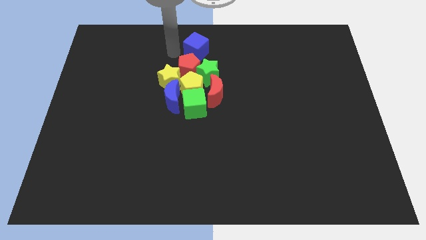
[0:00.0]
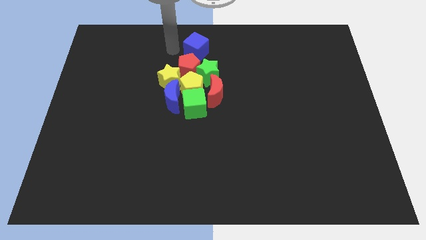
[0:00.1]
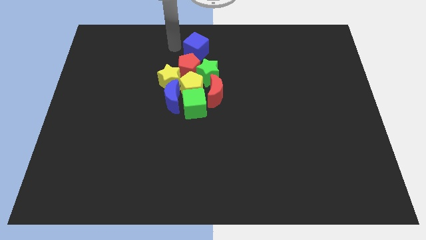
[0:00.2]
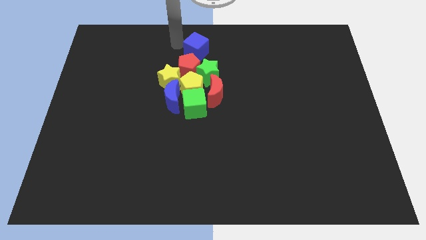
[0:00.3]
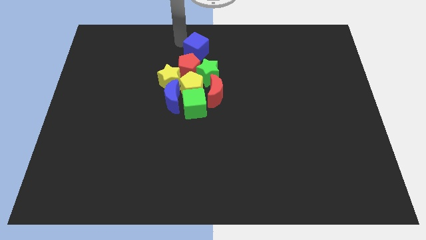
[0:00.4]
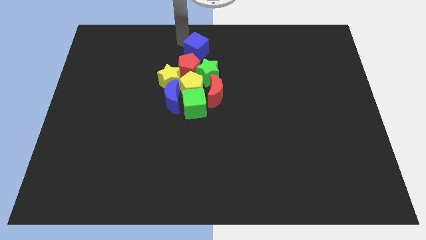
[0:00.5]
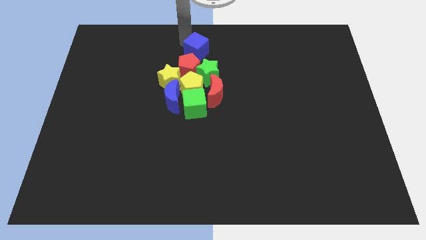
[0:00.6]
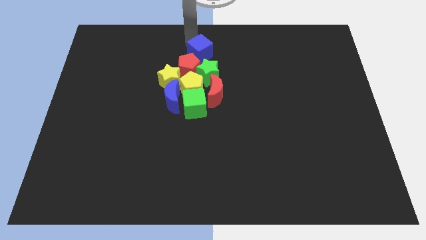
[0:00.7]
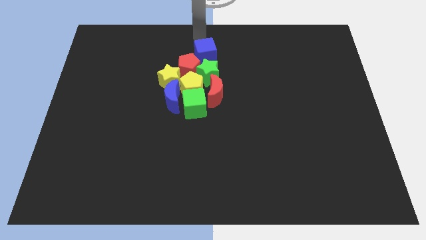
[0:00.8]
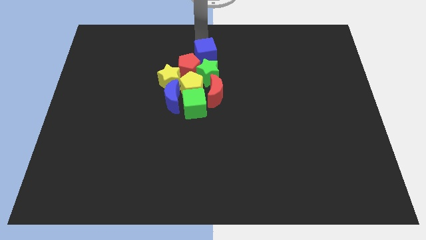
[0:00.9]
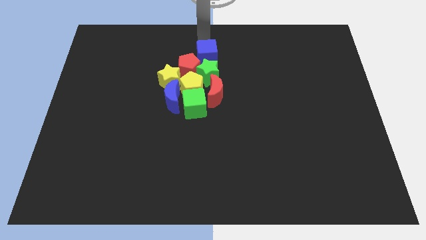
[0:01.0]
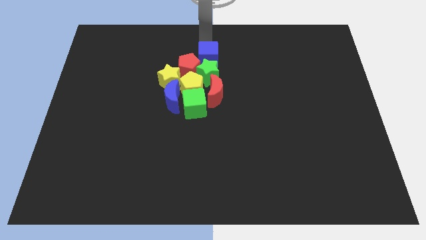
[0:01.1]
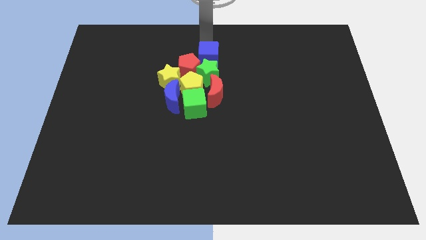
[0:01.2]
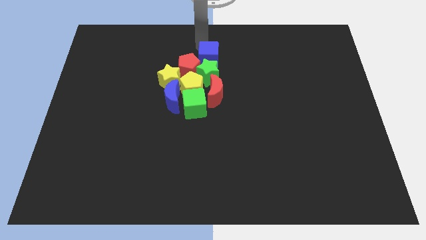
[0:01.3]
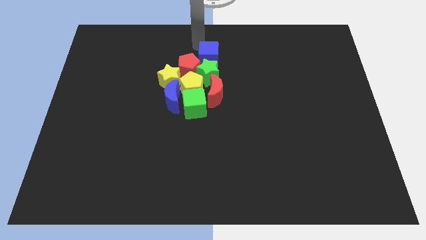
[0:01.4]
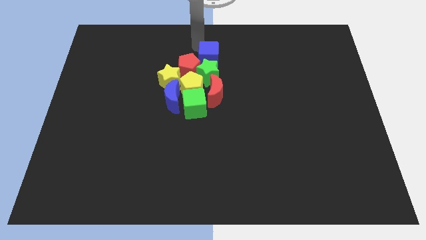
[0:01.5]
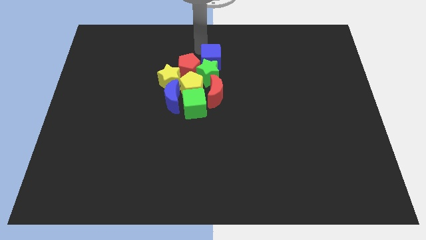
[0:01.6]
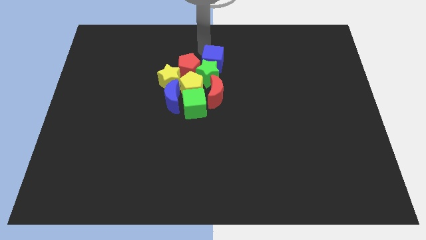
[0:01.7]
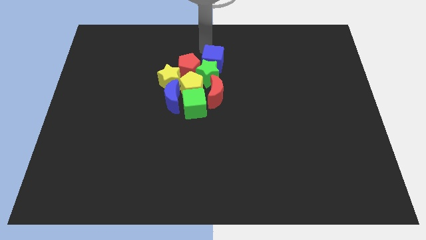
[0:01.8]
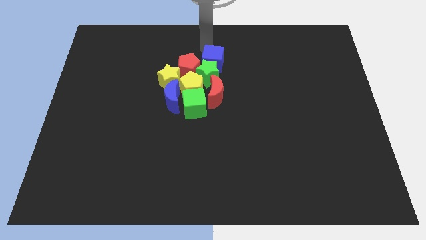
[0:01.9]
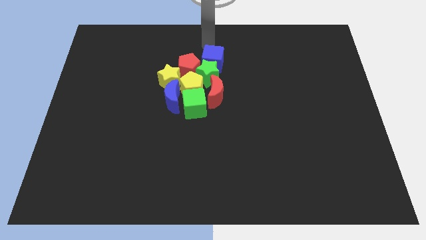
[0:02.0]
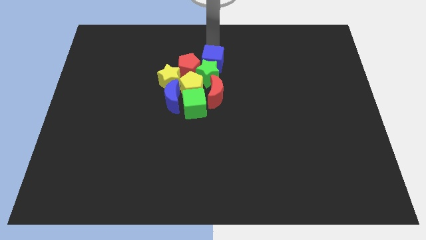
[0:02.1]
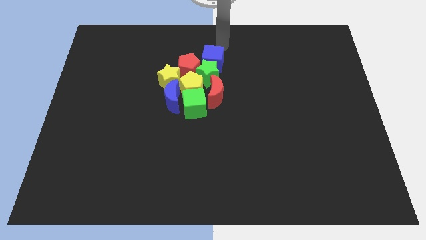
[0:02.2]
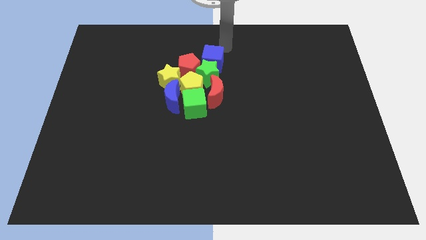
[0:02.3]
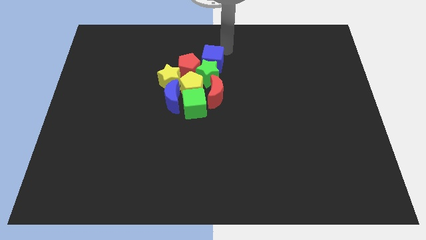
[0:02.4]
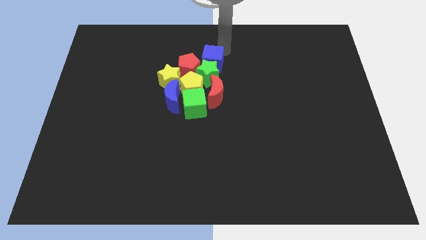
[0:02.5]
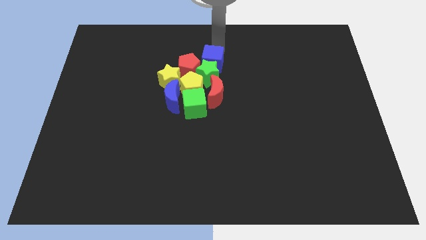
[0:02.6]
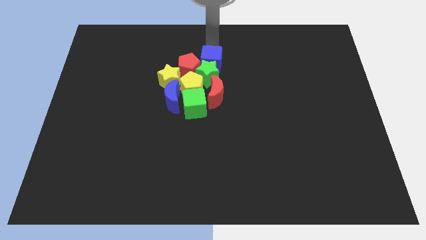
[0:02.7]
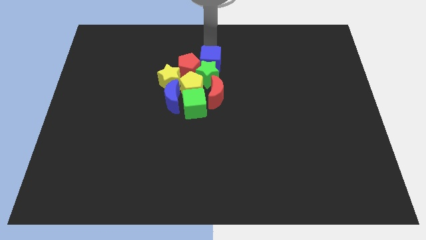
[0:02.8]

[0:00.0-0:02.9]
push the blue cube into the top of the green star

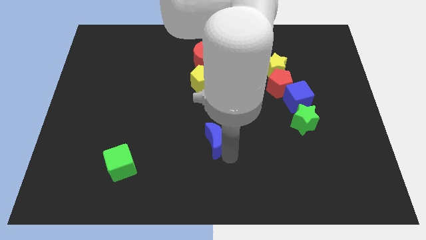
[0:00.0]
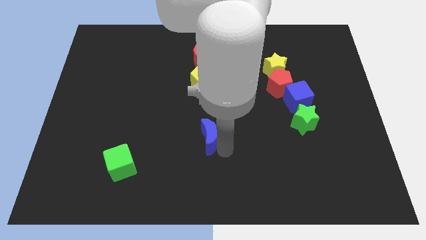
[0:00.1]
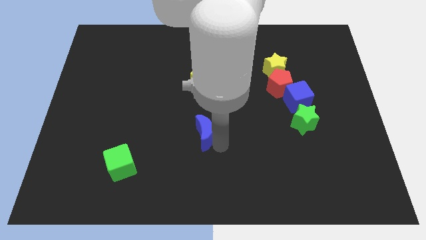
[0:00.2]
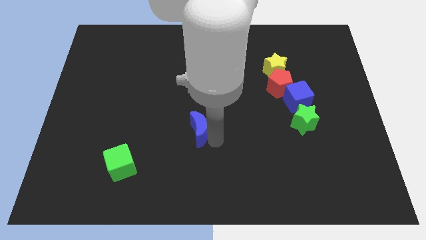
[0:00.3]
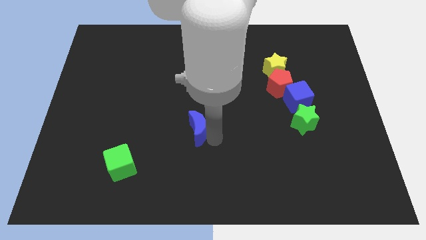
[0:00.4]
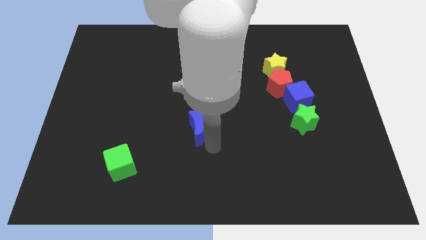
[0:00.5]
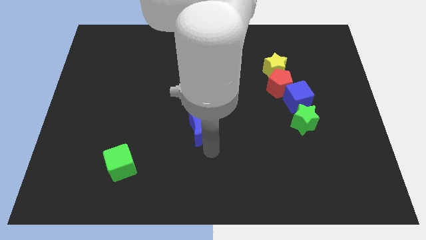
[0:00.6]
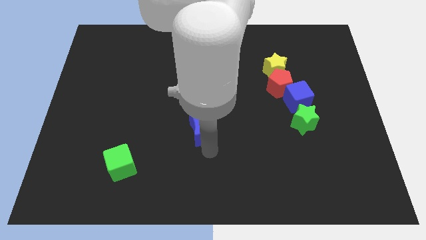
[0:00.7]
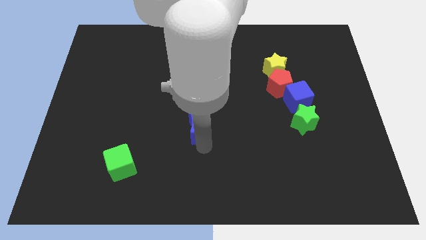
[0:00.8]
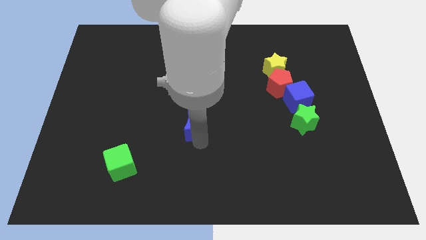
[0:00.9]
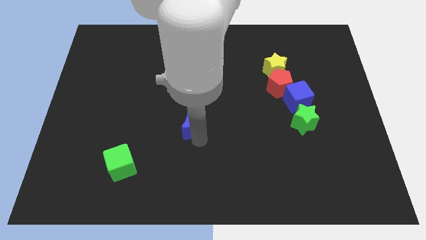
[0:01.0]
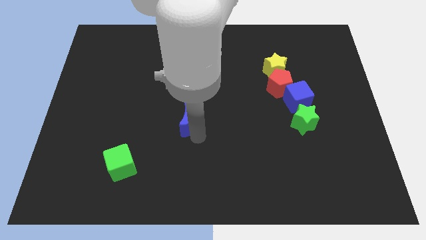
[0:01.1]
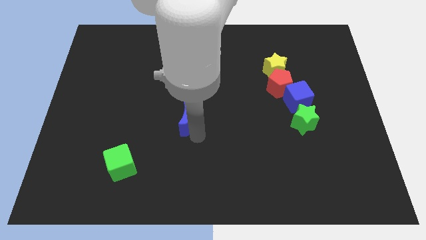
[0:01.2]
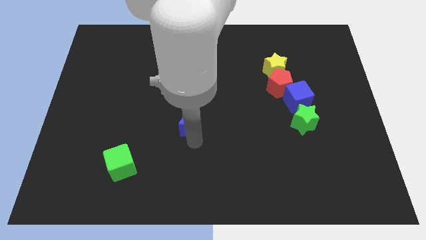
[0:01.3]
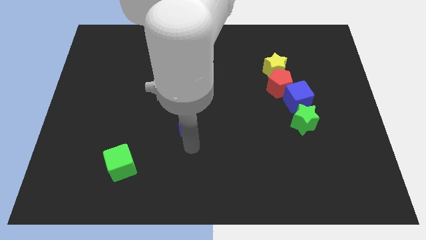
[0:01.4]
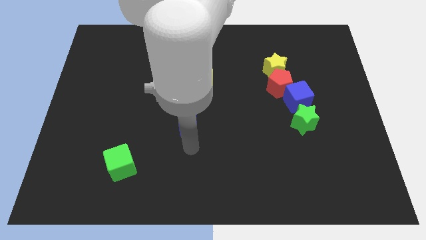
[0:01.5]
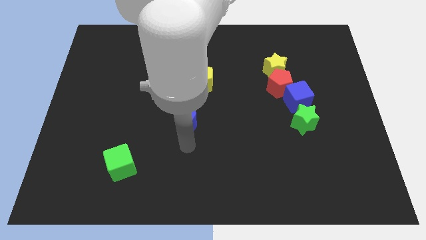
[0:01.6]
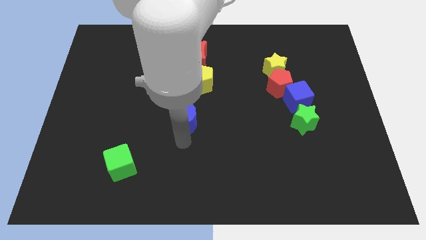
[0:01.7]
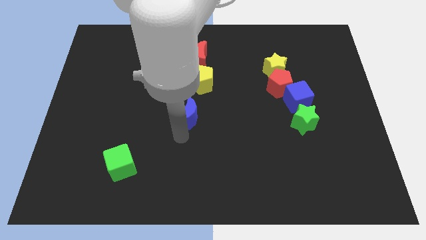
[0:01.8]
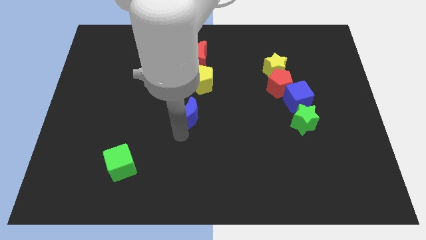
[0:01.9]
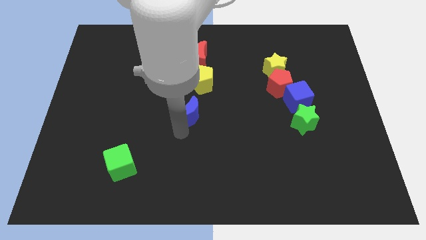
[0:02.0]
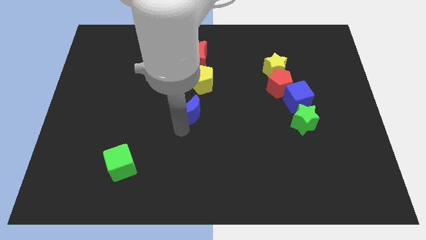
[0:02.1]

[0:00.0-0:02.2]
push blue crescent towards the yellow pentagon

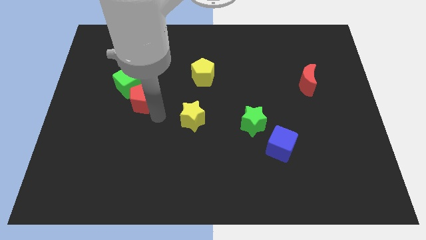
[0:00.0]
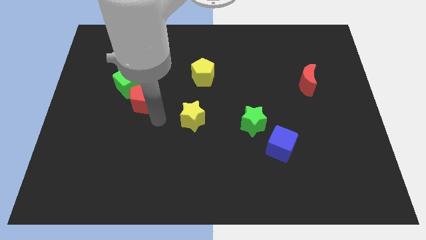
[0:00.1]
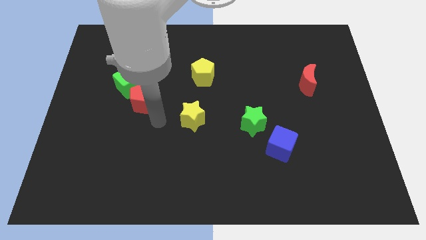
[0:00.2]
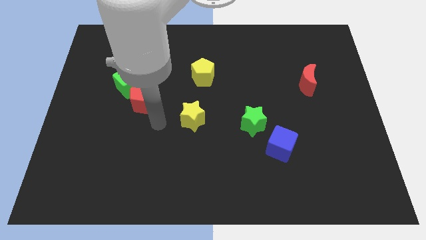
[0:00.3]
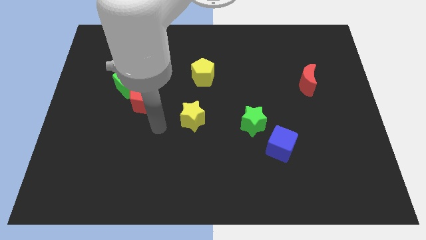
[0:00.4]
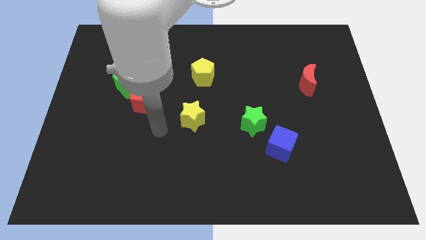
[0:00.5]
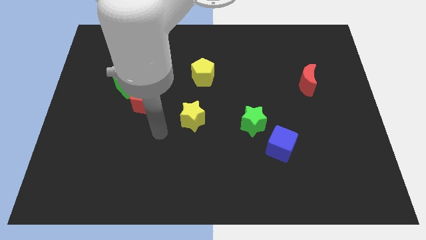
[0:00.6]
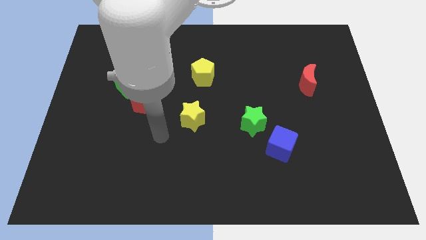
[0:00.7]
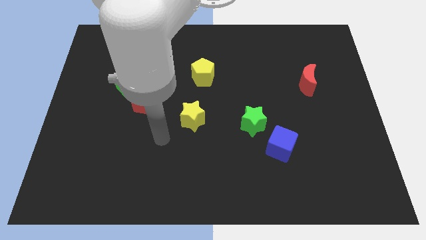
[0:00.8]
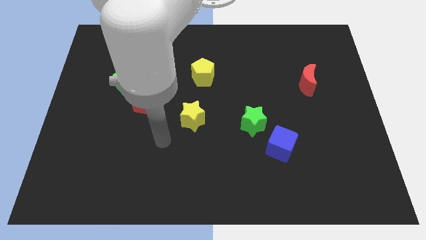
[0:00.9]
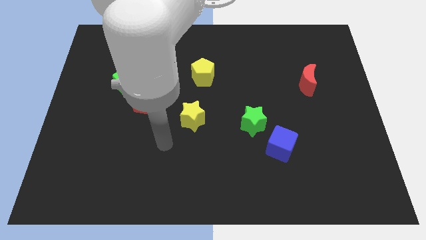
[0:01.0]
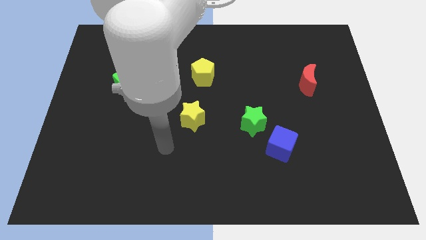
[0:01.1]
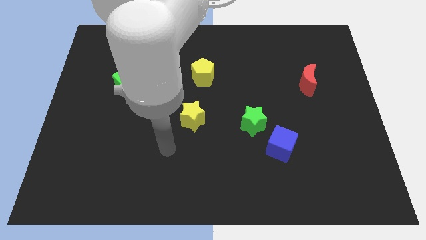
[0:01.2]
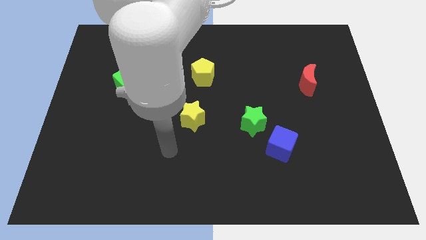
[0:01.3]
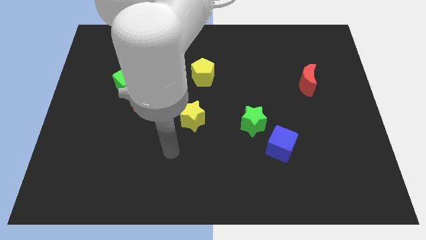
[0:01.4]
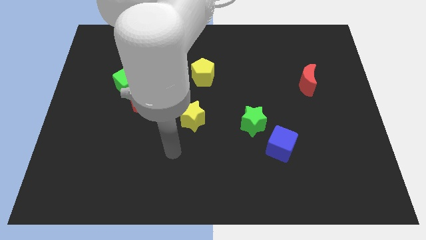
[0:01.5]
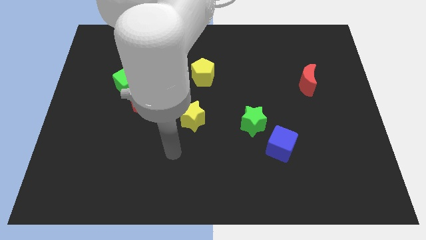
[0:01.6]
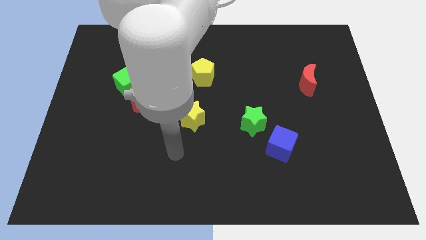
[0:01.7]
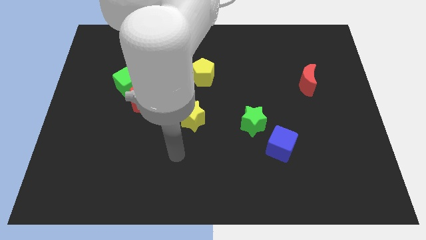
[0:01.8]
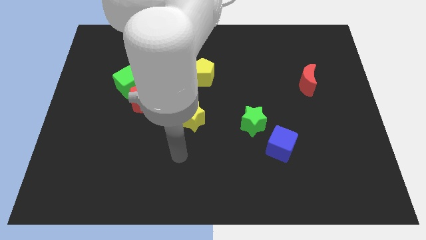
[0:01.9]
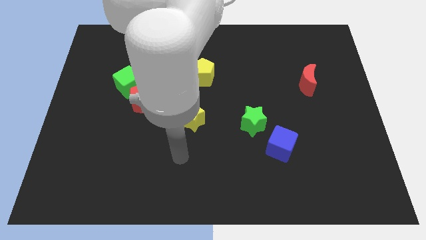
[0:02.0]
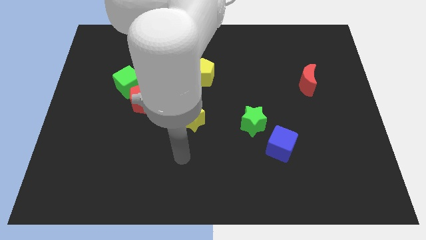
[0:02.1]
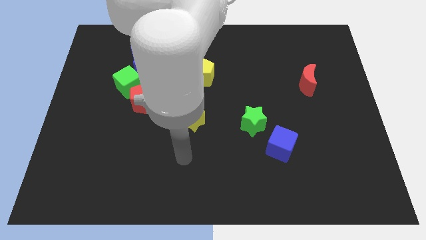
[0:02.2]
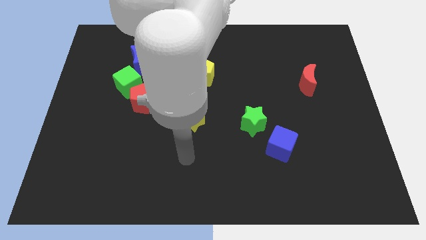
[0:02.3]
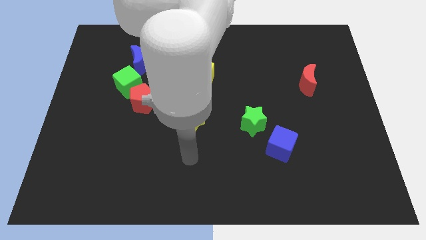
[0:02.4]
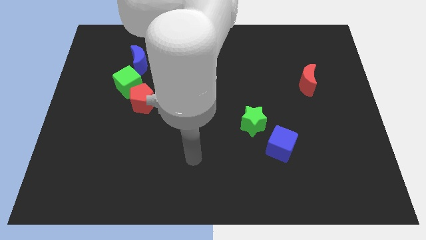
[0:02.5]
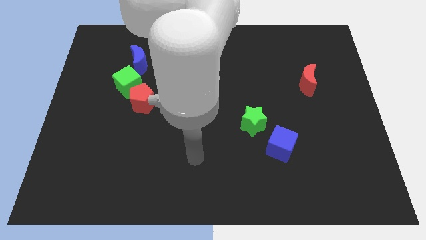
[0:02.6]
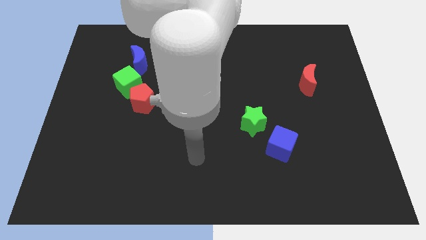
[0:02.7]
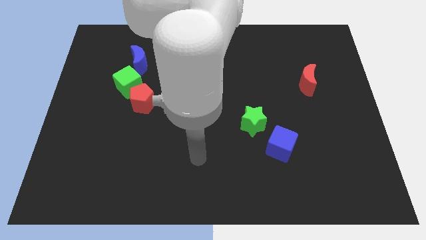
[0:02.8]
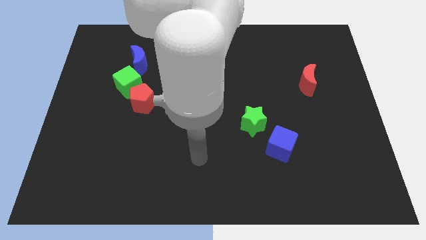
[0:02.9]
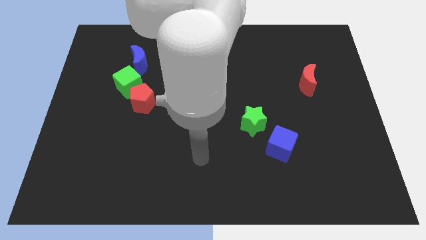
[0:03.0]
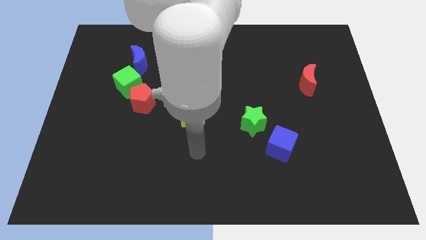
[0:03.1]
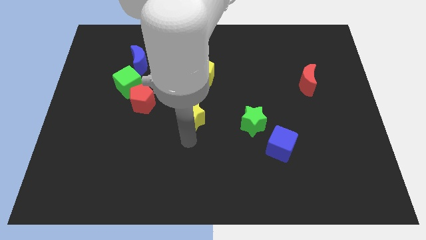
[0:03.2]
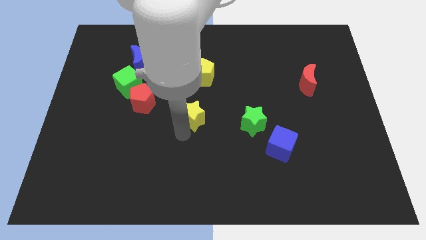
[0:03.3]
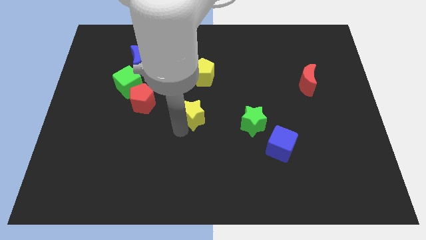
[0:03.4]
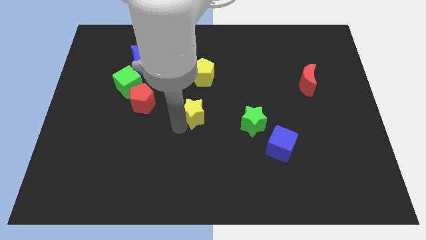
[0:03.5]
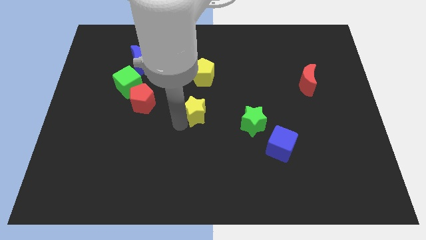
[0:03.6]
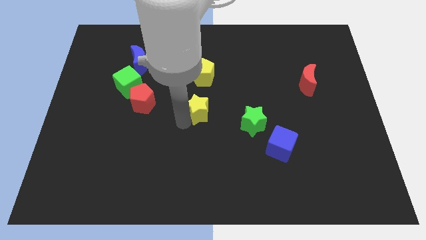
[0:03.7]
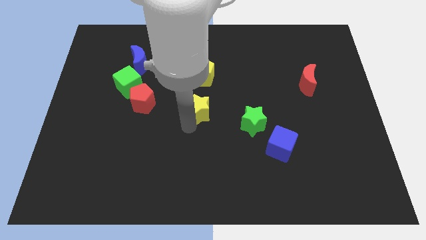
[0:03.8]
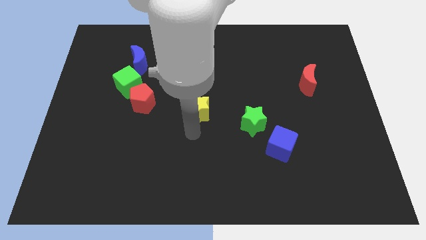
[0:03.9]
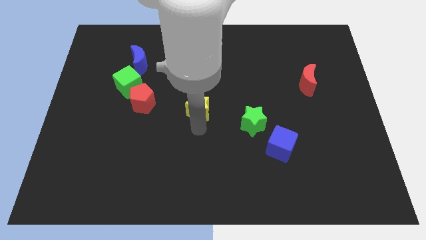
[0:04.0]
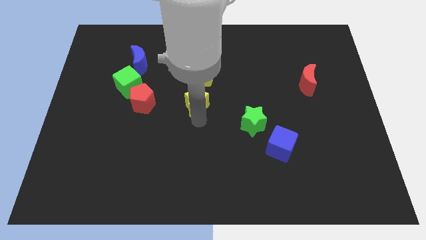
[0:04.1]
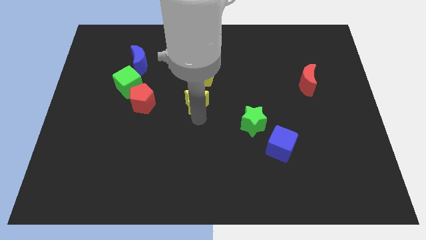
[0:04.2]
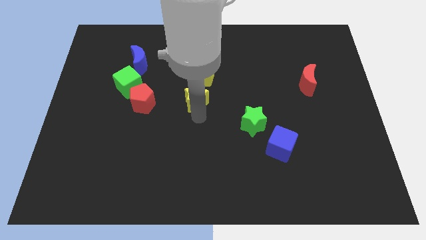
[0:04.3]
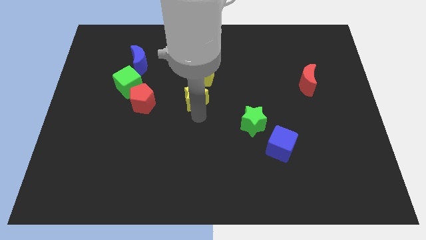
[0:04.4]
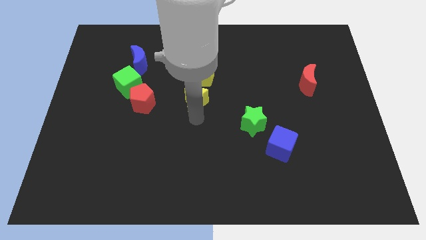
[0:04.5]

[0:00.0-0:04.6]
push the yellow star slightly to the top
